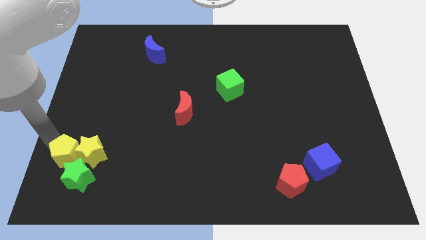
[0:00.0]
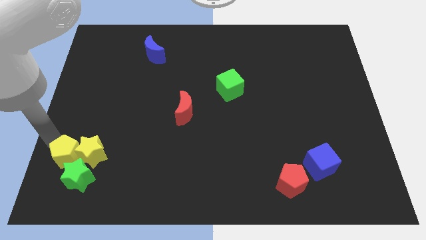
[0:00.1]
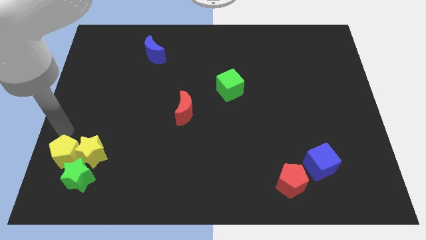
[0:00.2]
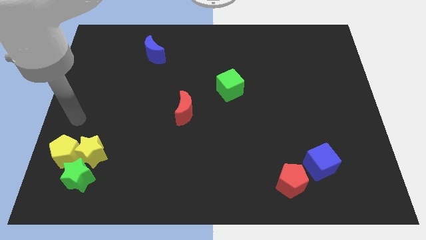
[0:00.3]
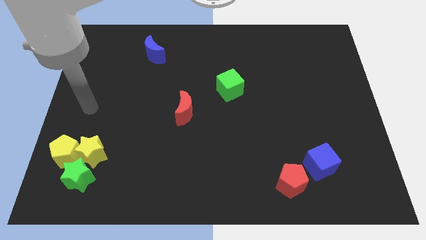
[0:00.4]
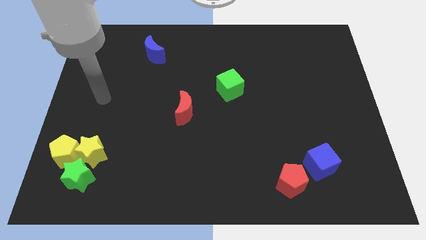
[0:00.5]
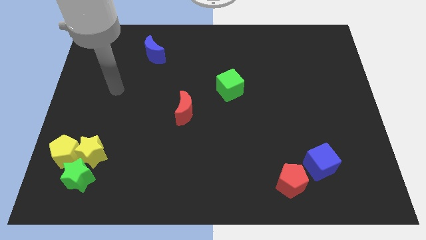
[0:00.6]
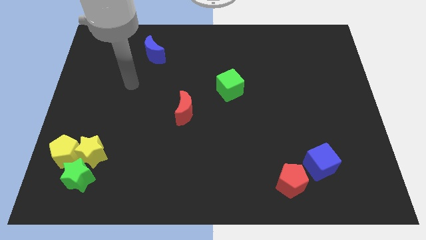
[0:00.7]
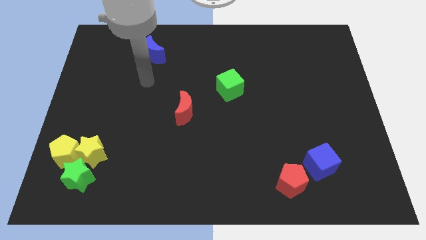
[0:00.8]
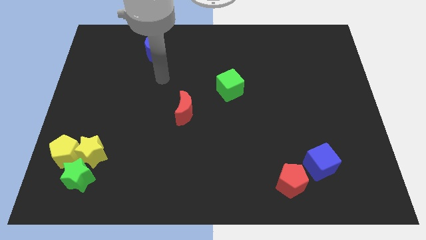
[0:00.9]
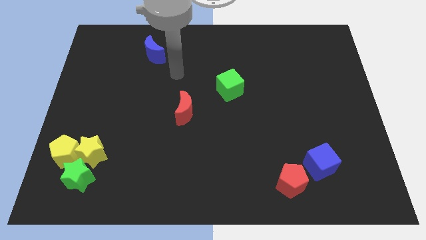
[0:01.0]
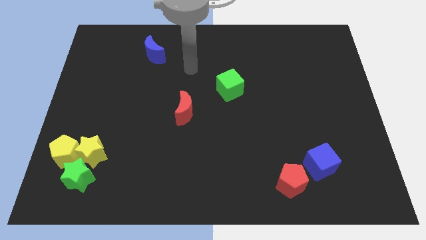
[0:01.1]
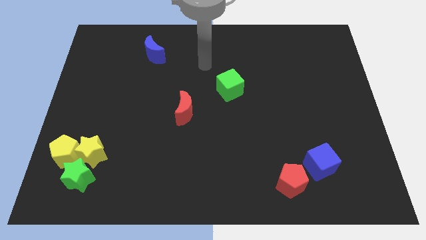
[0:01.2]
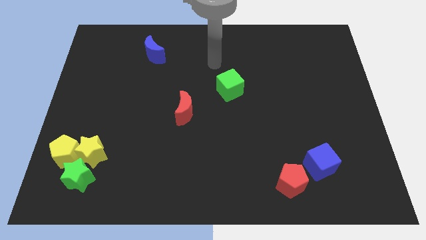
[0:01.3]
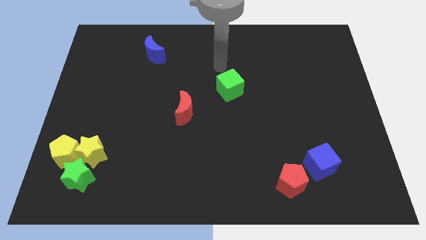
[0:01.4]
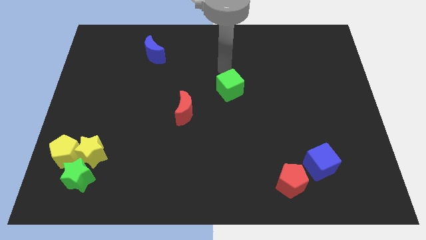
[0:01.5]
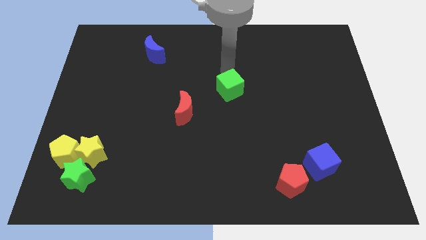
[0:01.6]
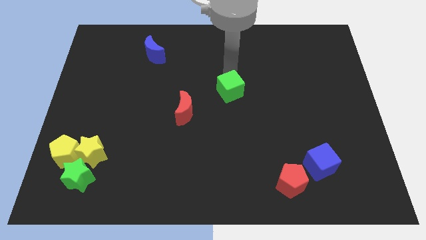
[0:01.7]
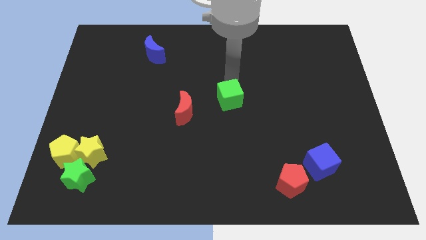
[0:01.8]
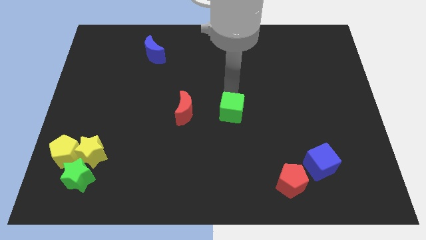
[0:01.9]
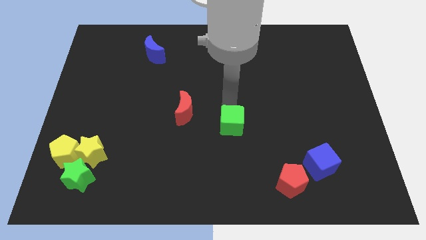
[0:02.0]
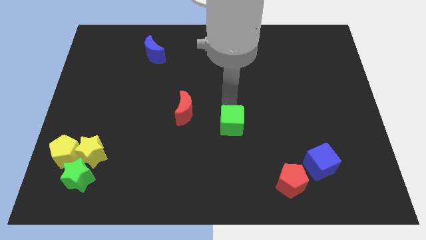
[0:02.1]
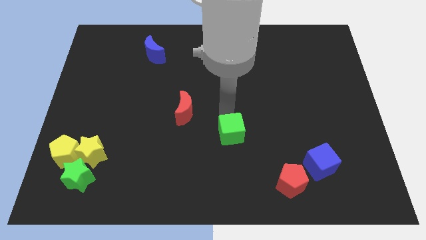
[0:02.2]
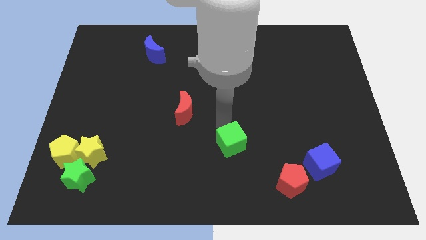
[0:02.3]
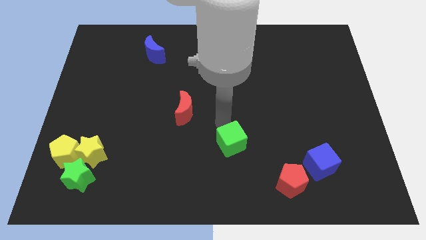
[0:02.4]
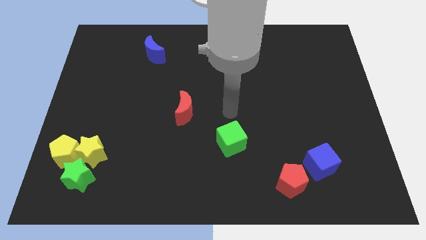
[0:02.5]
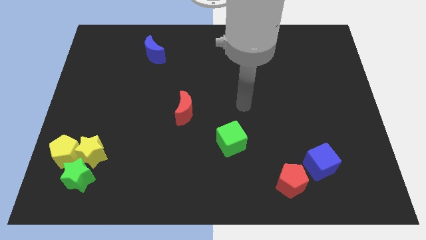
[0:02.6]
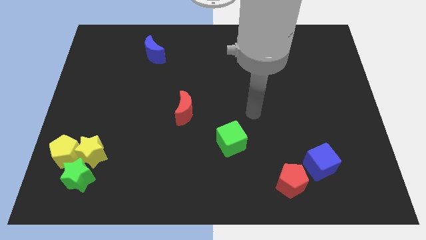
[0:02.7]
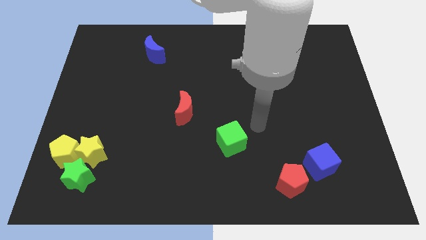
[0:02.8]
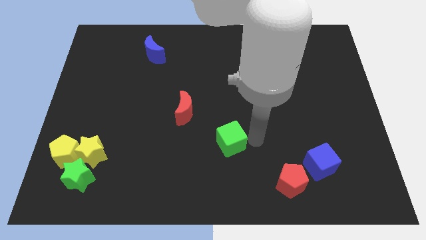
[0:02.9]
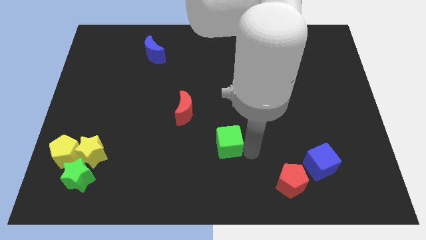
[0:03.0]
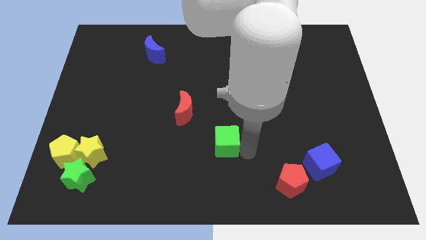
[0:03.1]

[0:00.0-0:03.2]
place the green cube in between the red blocks

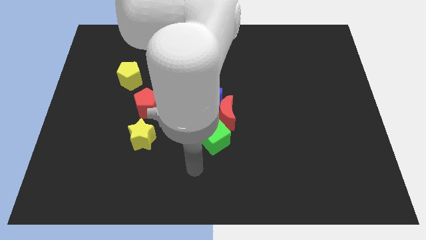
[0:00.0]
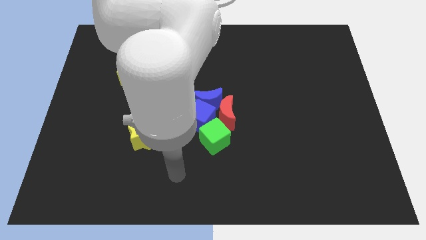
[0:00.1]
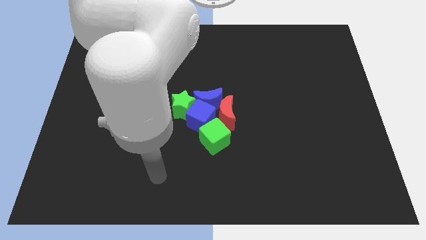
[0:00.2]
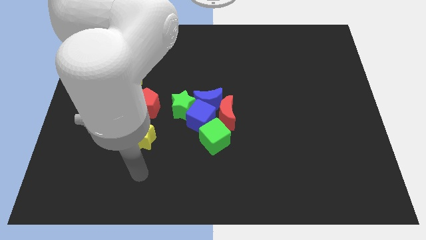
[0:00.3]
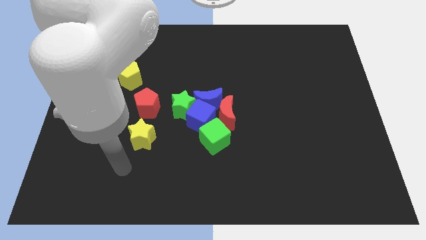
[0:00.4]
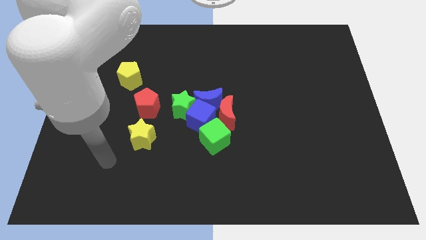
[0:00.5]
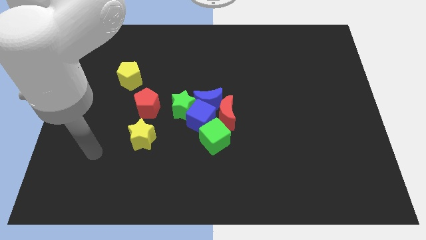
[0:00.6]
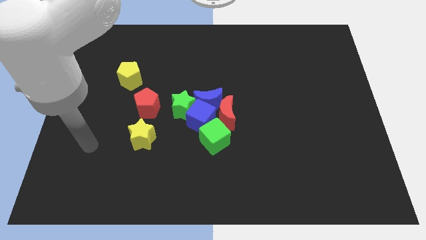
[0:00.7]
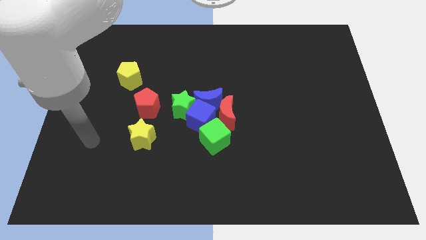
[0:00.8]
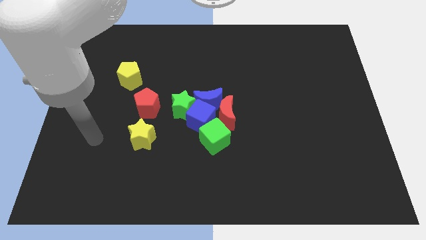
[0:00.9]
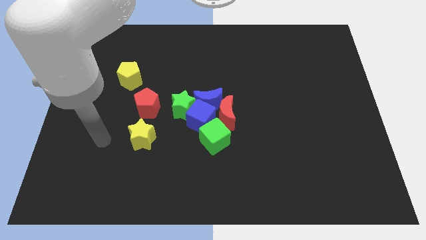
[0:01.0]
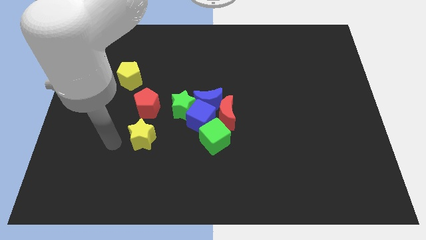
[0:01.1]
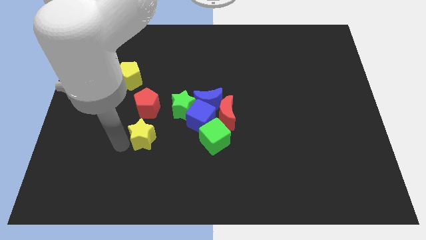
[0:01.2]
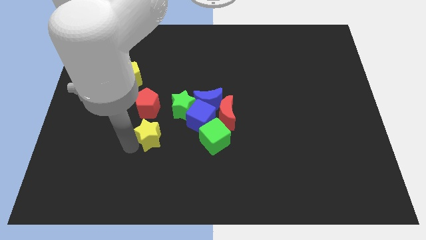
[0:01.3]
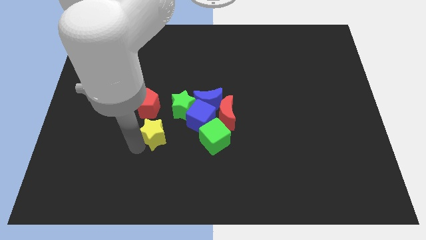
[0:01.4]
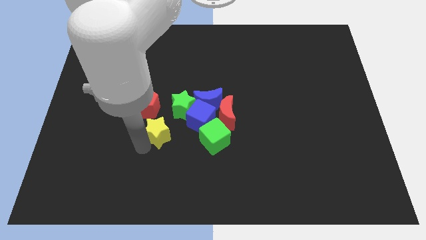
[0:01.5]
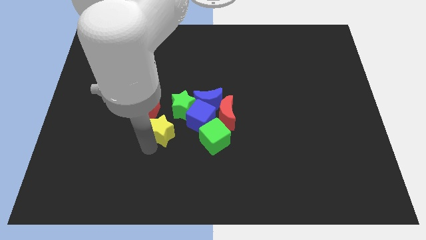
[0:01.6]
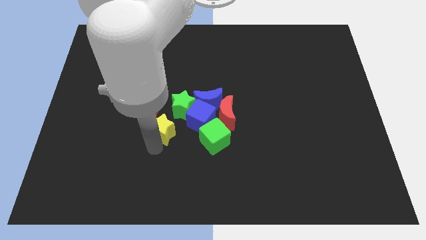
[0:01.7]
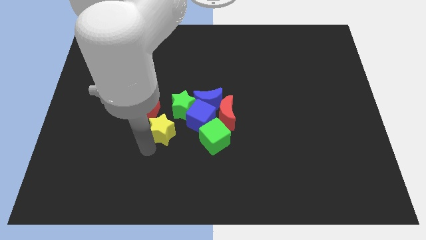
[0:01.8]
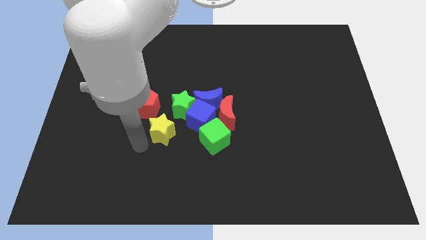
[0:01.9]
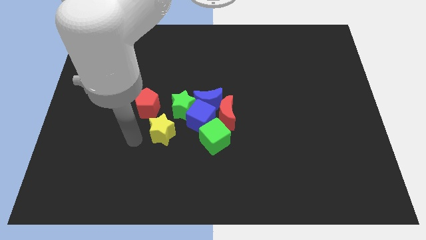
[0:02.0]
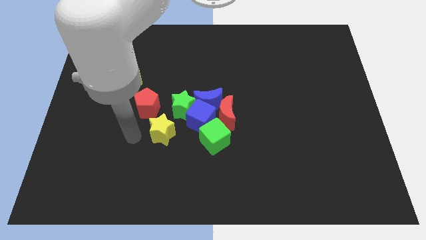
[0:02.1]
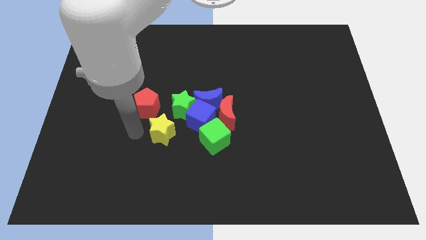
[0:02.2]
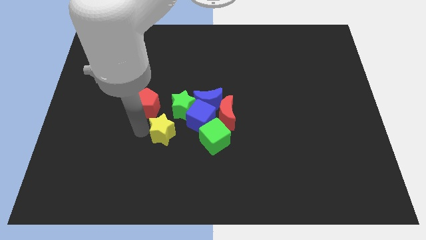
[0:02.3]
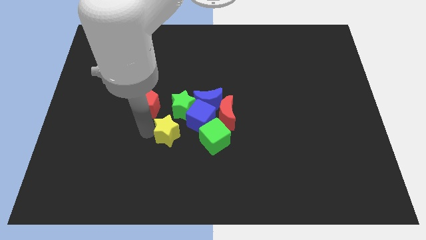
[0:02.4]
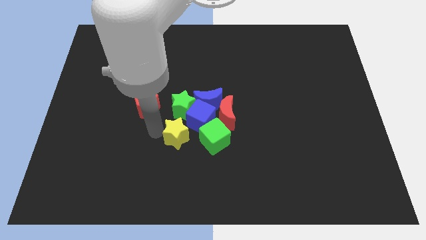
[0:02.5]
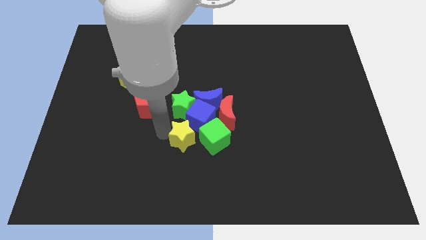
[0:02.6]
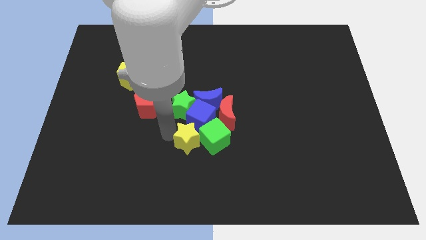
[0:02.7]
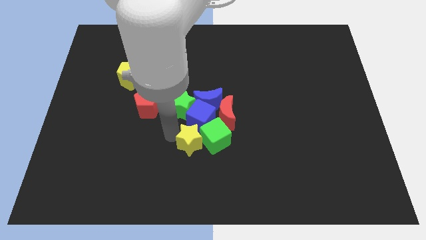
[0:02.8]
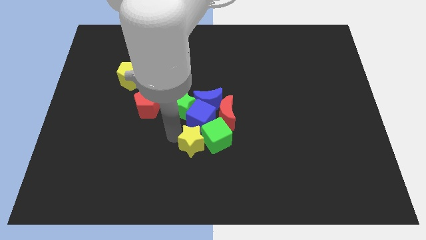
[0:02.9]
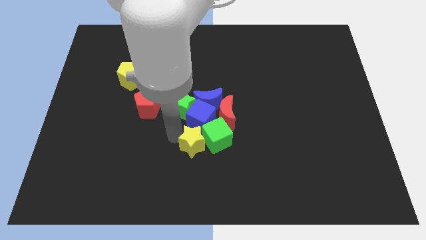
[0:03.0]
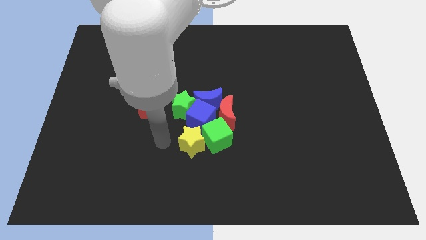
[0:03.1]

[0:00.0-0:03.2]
place the yellow star below to the blue cube

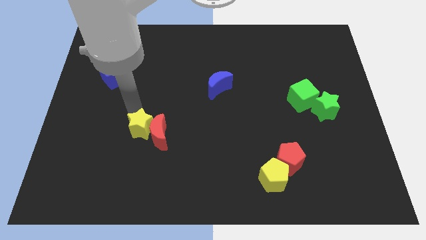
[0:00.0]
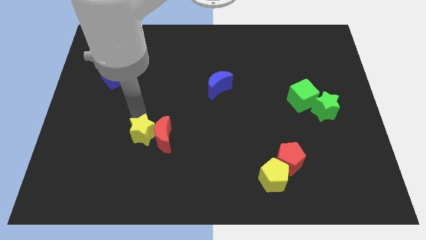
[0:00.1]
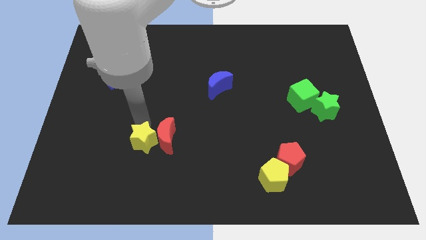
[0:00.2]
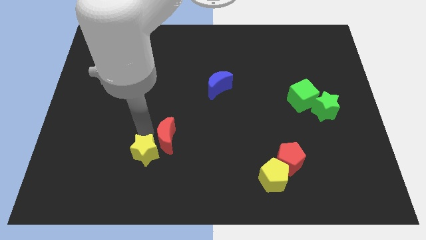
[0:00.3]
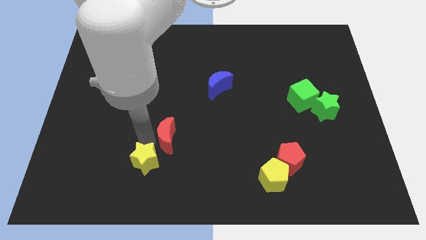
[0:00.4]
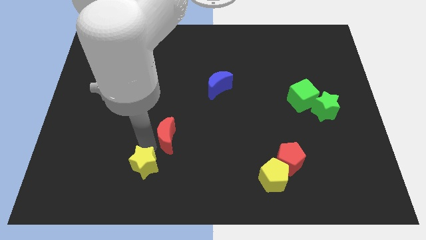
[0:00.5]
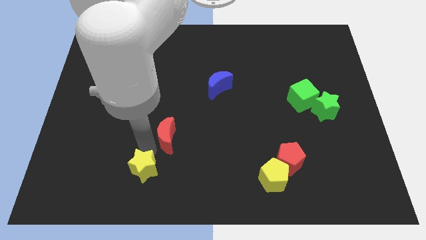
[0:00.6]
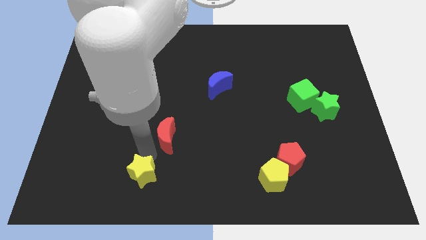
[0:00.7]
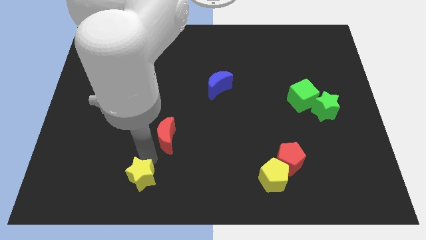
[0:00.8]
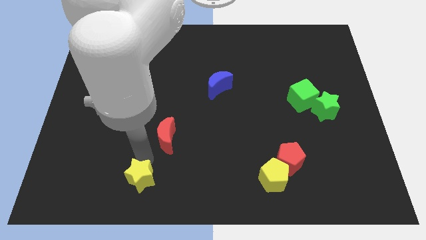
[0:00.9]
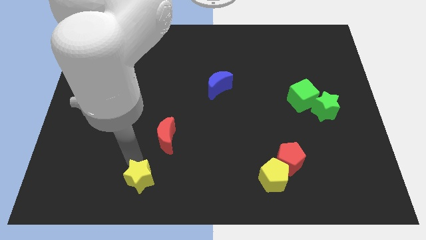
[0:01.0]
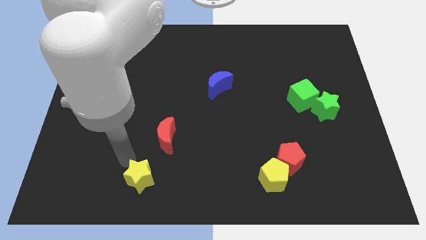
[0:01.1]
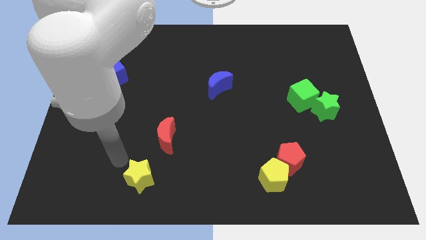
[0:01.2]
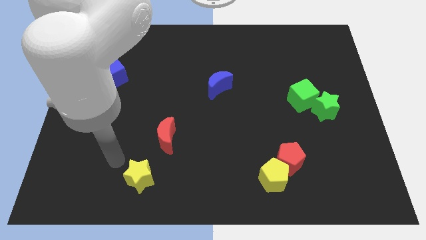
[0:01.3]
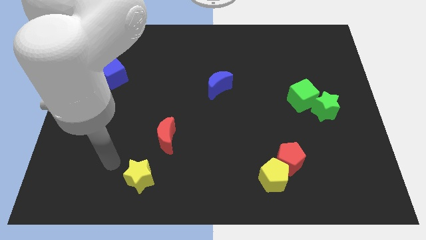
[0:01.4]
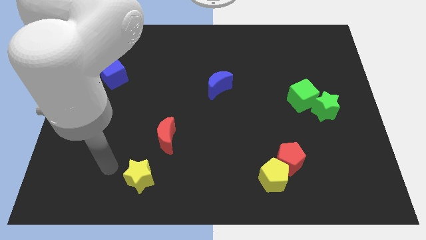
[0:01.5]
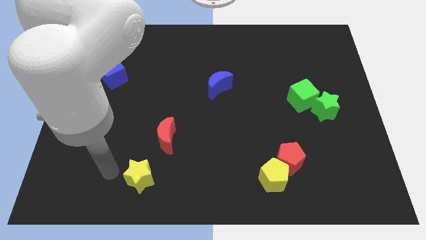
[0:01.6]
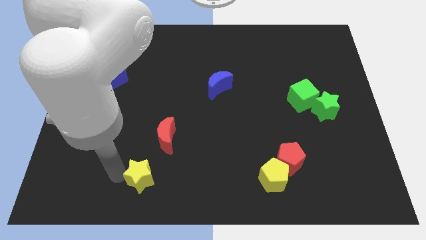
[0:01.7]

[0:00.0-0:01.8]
separate the yellow star from red crescent

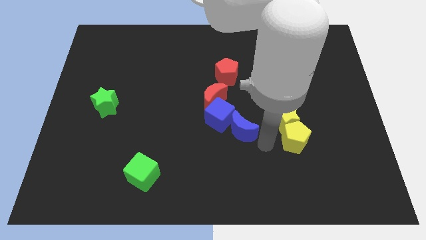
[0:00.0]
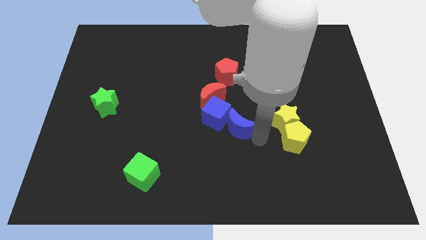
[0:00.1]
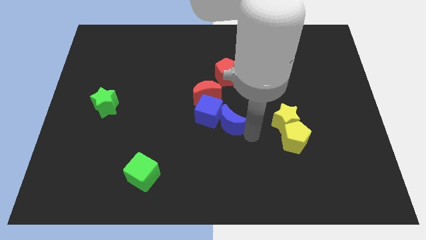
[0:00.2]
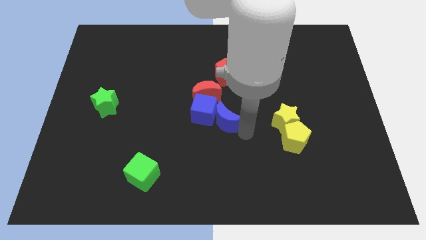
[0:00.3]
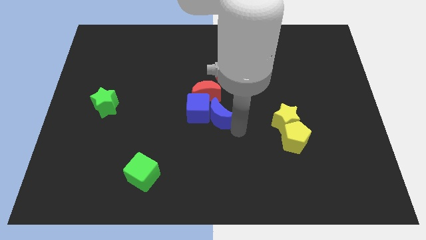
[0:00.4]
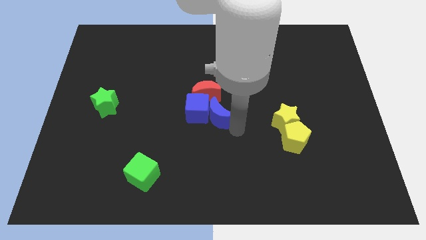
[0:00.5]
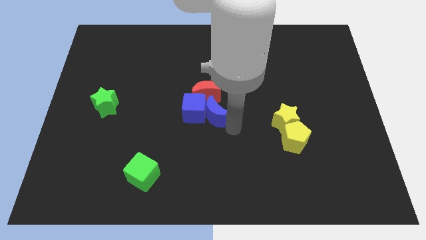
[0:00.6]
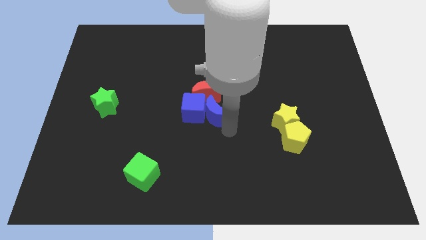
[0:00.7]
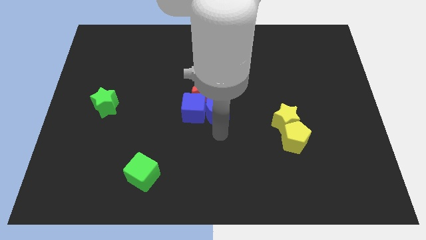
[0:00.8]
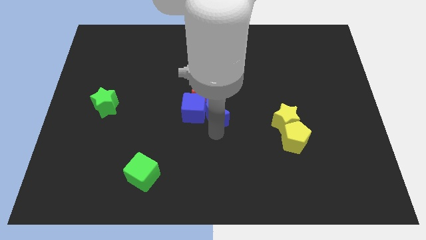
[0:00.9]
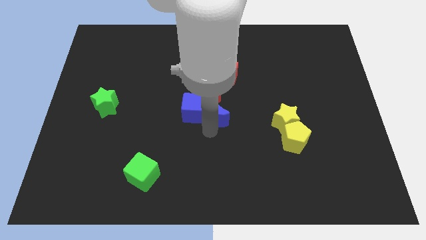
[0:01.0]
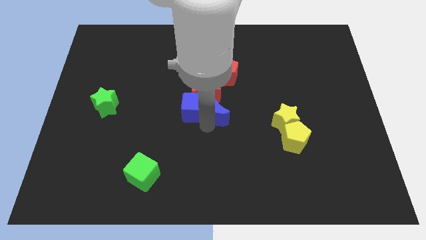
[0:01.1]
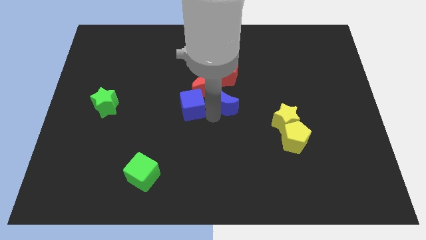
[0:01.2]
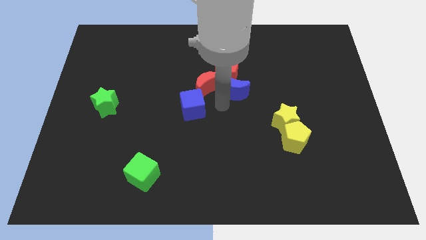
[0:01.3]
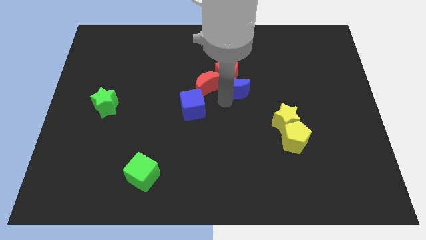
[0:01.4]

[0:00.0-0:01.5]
push the blue crescent towards the red pentagon
